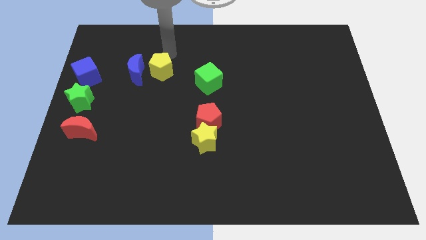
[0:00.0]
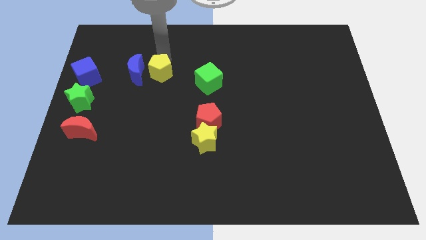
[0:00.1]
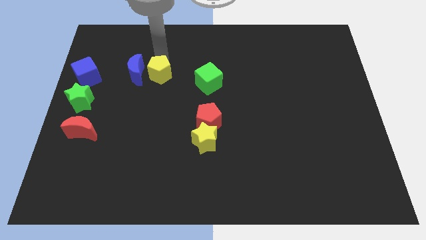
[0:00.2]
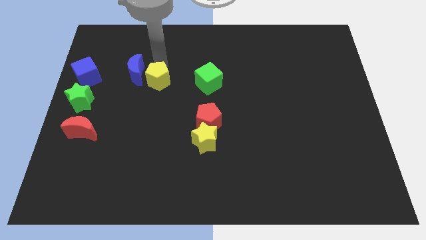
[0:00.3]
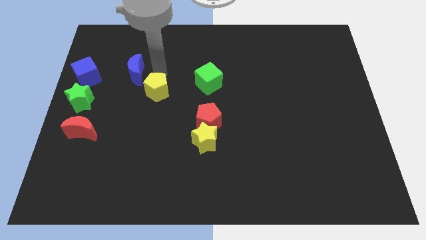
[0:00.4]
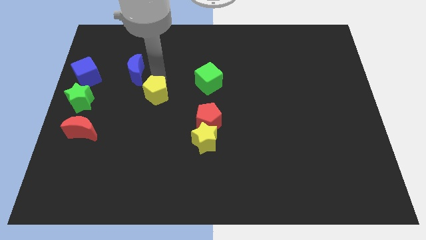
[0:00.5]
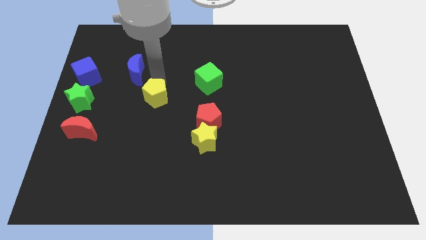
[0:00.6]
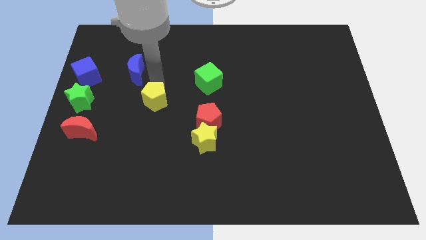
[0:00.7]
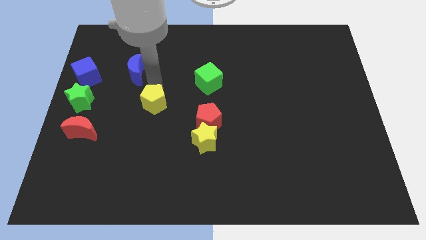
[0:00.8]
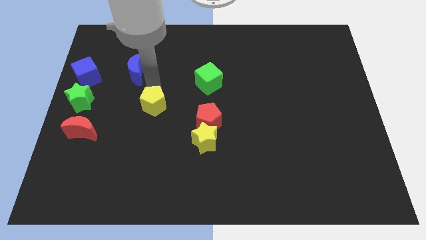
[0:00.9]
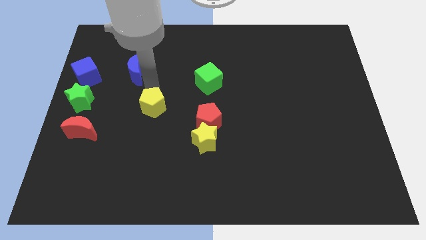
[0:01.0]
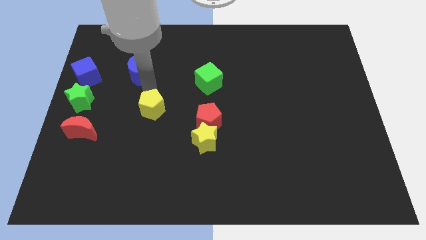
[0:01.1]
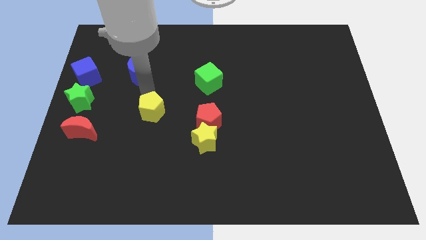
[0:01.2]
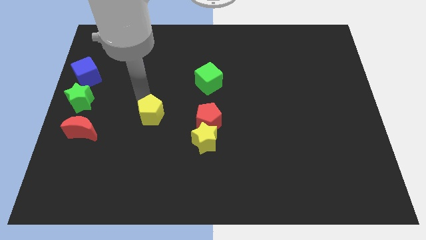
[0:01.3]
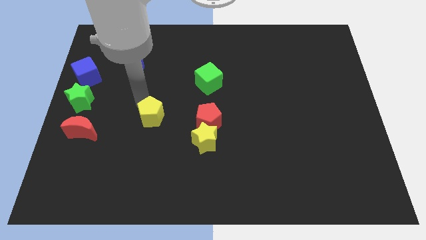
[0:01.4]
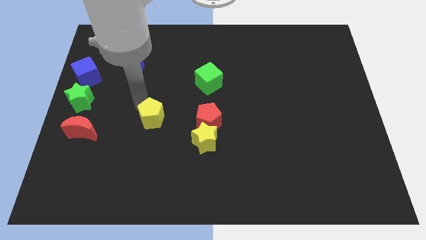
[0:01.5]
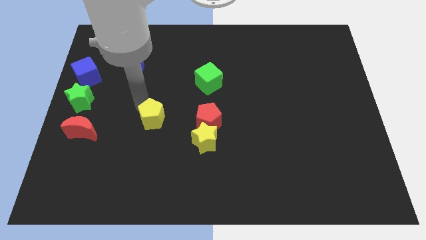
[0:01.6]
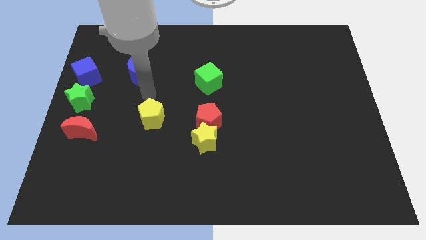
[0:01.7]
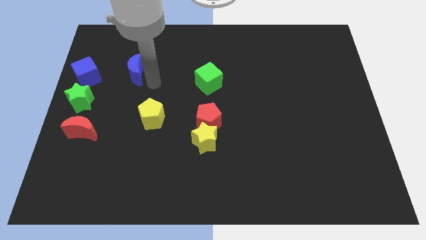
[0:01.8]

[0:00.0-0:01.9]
move the yellow pentagon left parallel to the red pentagon

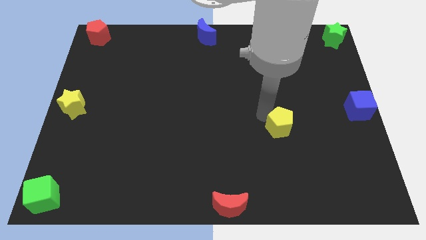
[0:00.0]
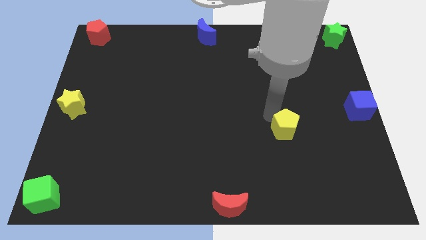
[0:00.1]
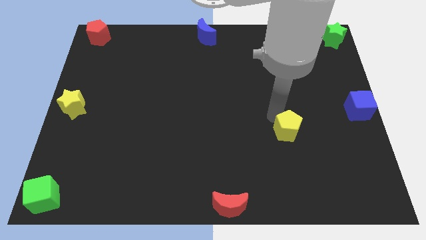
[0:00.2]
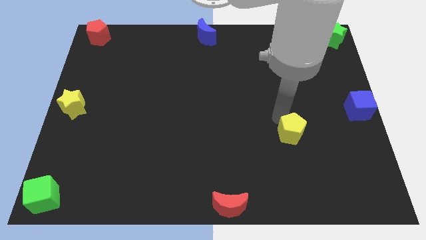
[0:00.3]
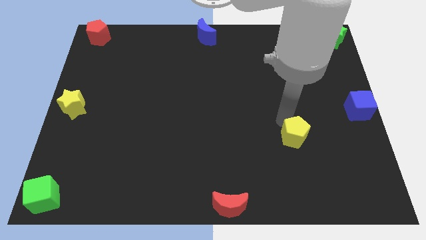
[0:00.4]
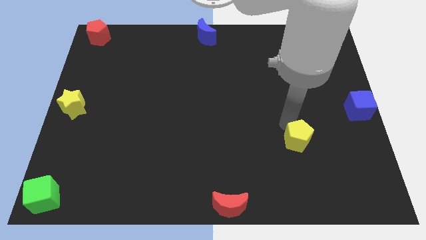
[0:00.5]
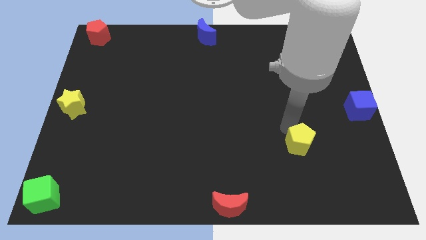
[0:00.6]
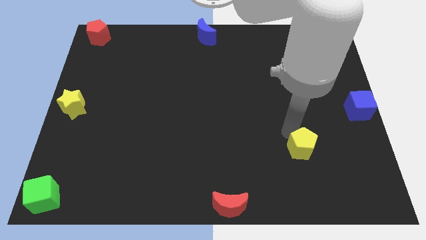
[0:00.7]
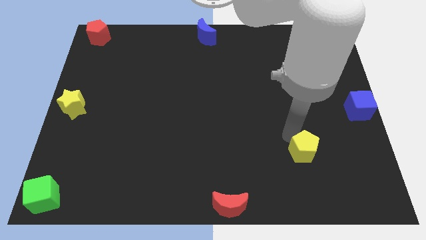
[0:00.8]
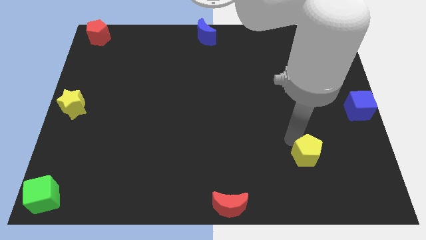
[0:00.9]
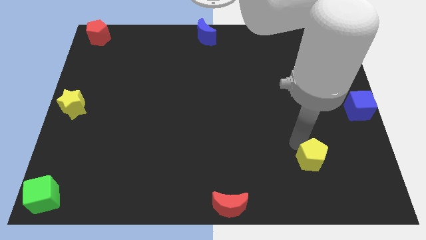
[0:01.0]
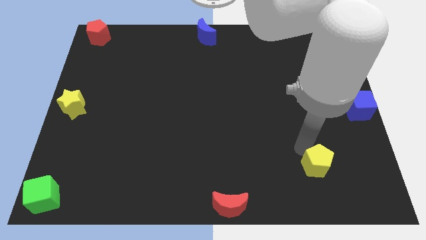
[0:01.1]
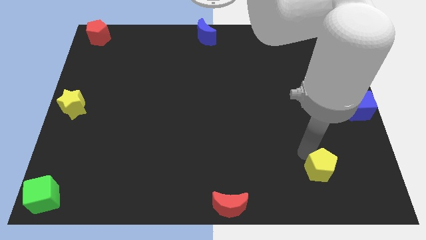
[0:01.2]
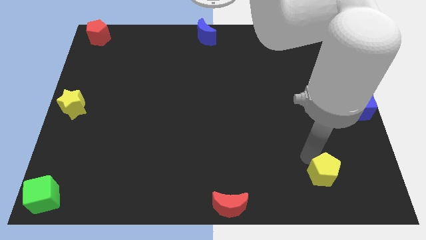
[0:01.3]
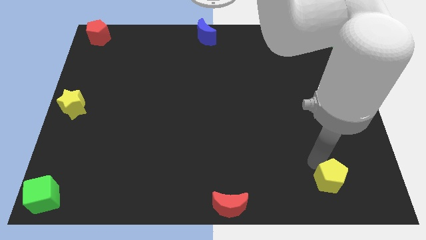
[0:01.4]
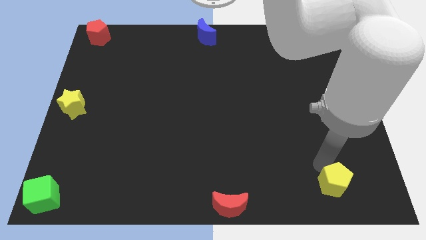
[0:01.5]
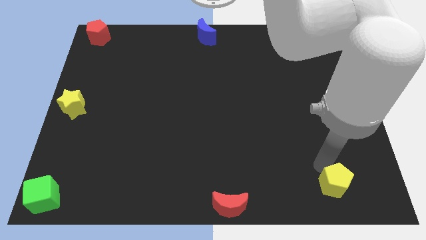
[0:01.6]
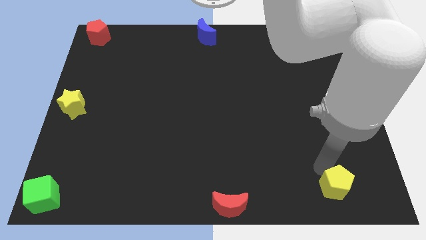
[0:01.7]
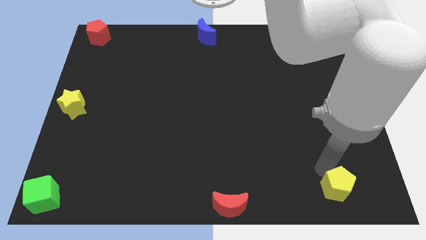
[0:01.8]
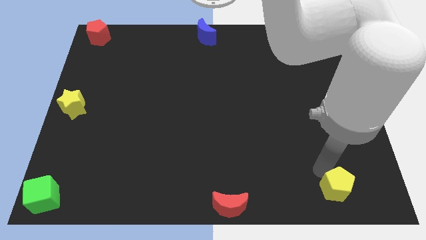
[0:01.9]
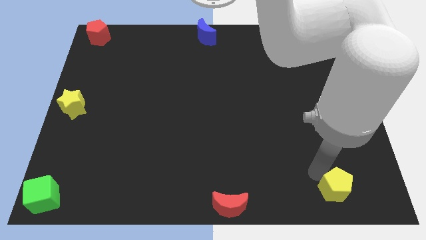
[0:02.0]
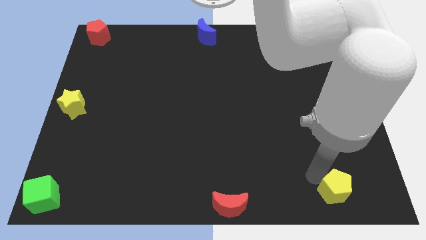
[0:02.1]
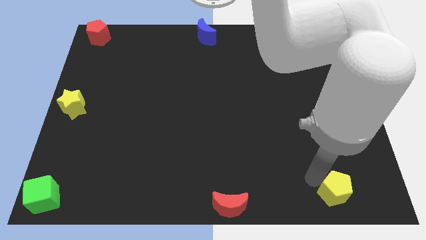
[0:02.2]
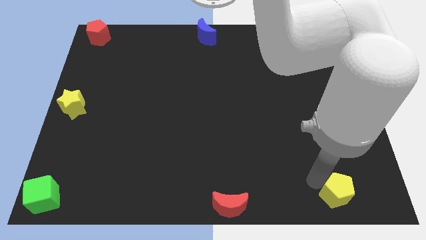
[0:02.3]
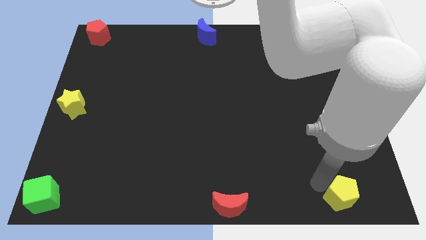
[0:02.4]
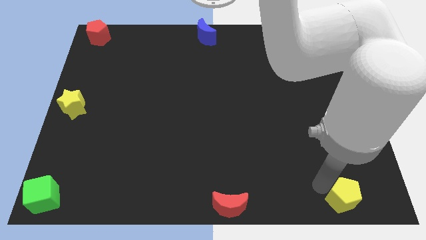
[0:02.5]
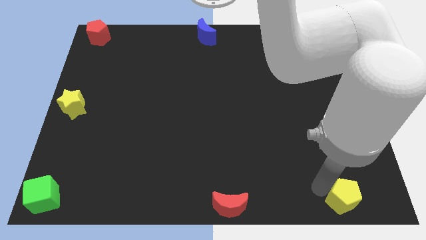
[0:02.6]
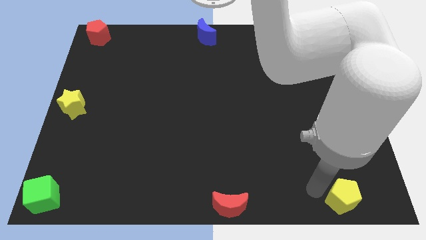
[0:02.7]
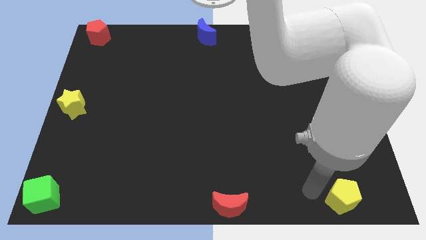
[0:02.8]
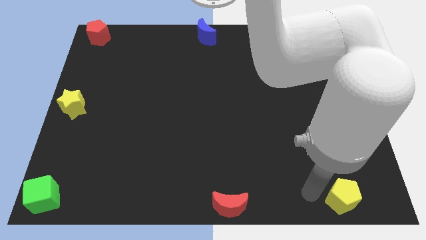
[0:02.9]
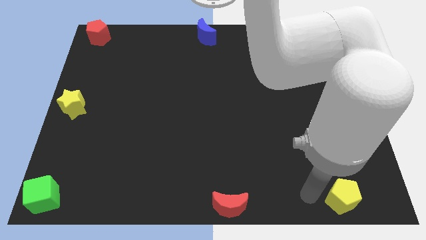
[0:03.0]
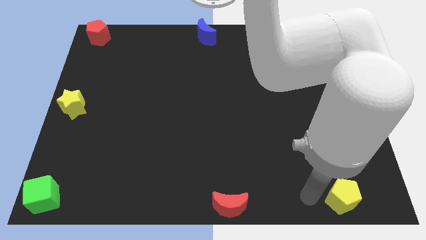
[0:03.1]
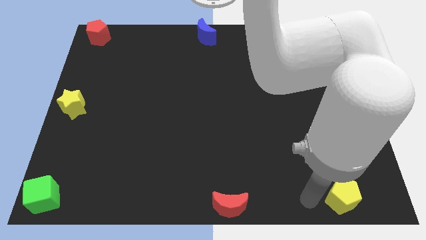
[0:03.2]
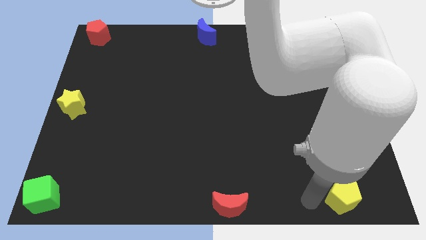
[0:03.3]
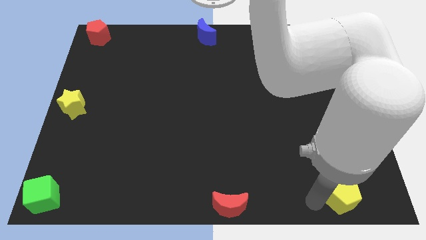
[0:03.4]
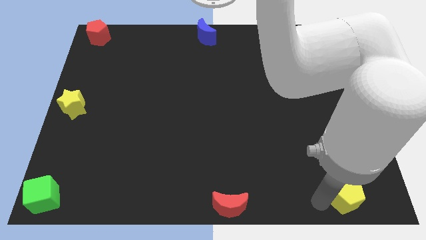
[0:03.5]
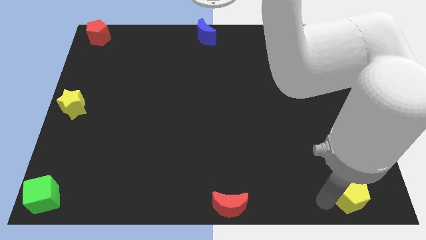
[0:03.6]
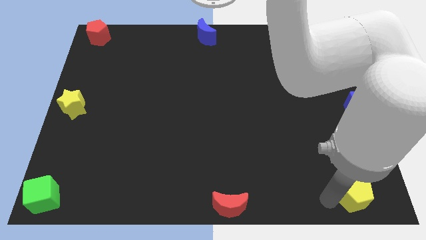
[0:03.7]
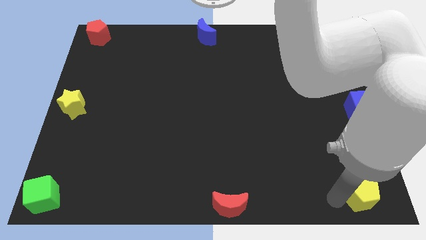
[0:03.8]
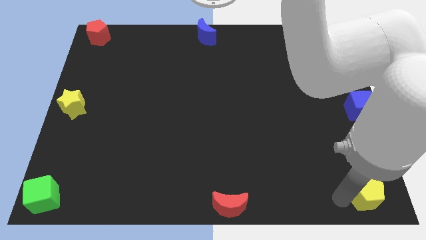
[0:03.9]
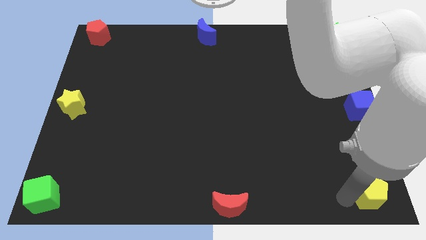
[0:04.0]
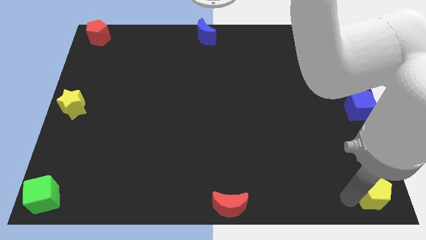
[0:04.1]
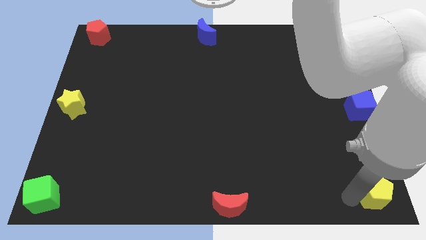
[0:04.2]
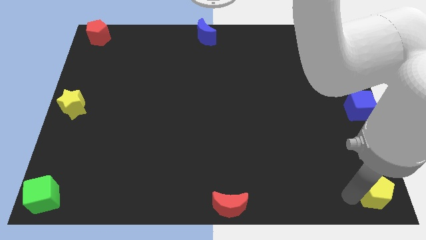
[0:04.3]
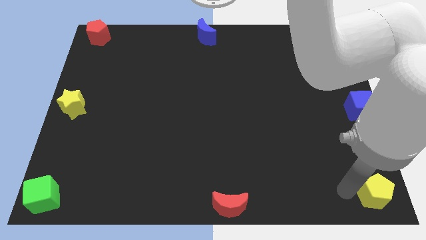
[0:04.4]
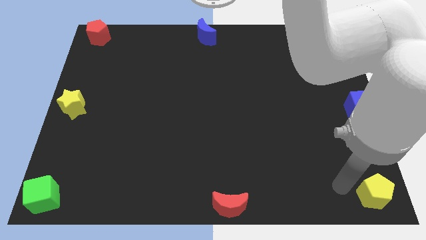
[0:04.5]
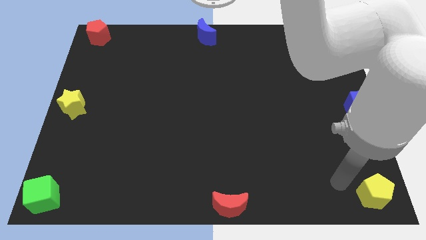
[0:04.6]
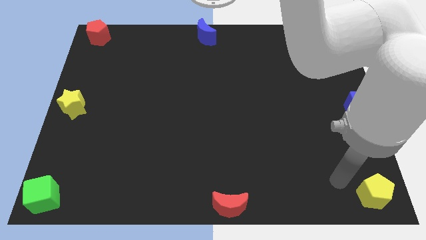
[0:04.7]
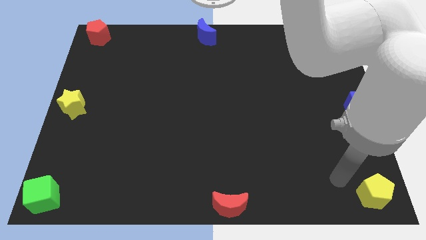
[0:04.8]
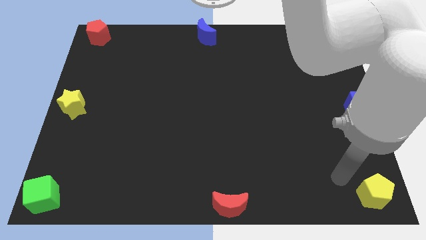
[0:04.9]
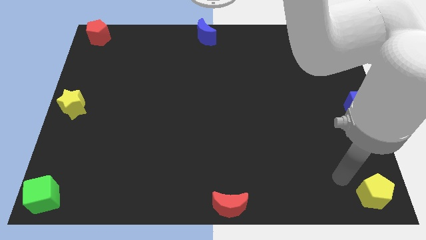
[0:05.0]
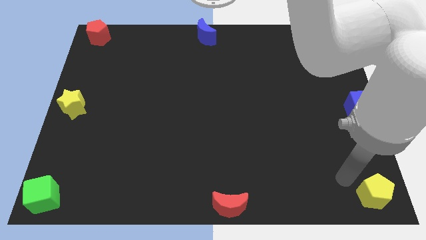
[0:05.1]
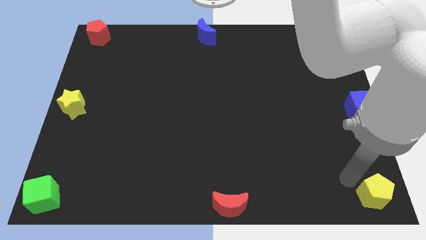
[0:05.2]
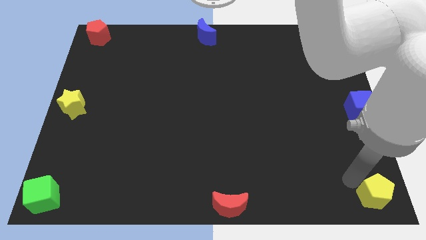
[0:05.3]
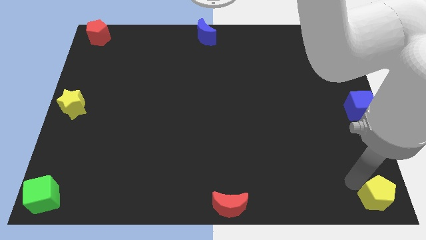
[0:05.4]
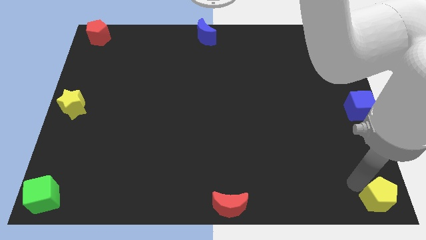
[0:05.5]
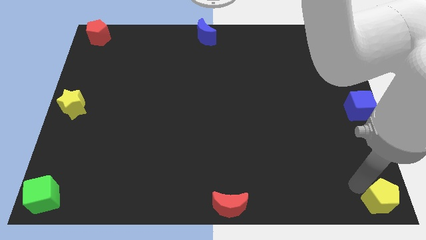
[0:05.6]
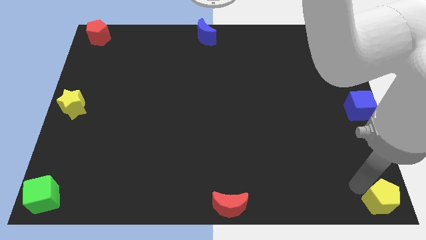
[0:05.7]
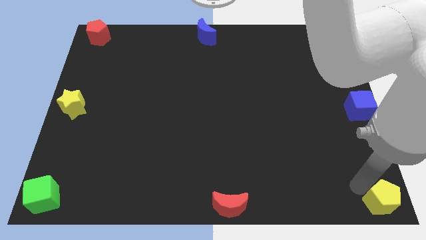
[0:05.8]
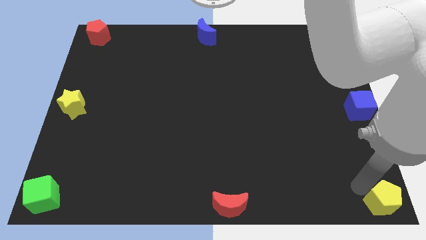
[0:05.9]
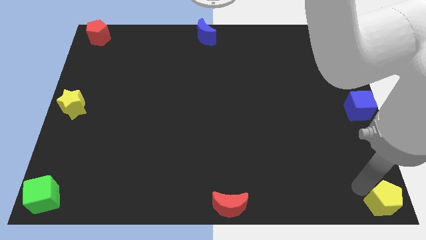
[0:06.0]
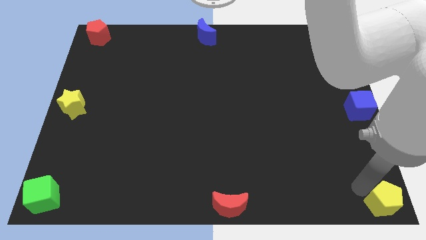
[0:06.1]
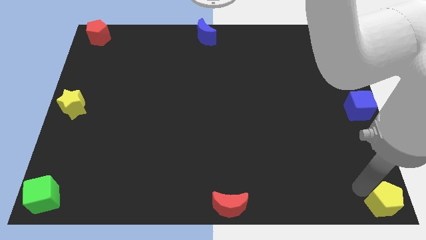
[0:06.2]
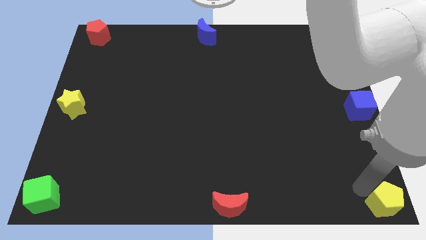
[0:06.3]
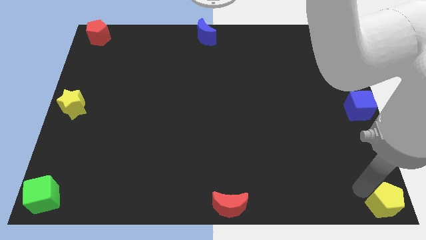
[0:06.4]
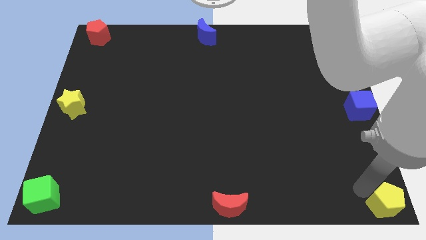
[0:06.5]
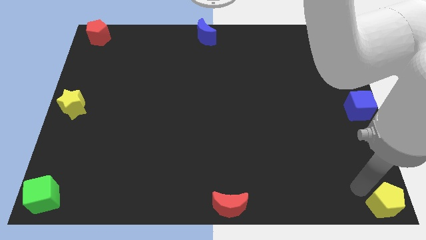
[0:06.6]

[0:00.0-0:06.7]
move the yellow pentagon to the bottom right on the board

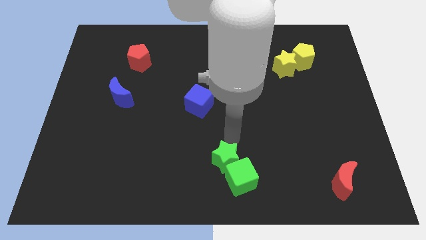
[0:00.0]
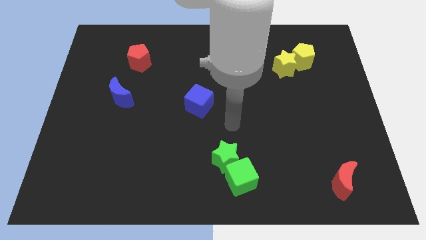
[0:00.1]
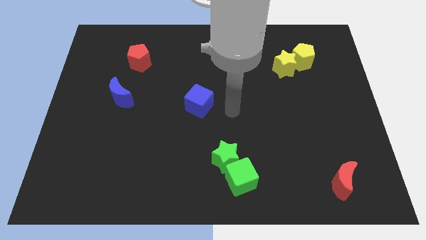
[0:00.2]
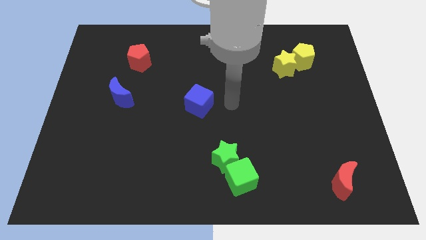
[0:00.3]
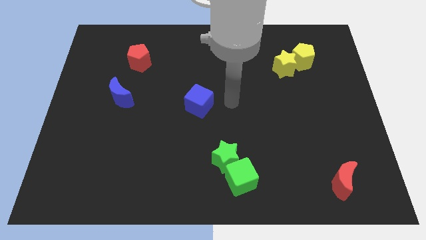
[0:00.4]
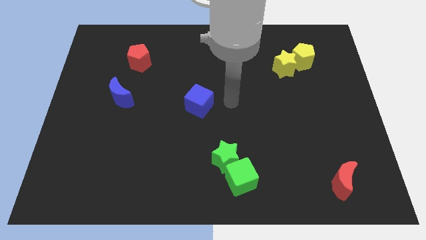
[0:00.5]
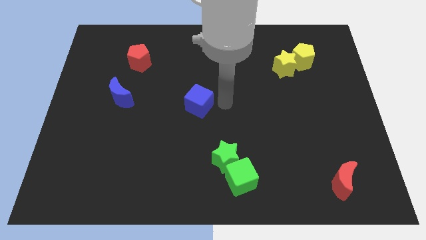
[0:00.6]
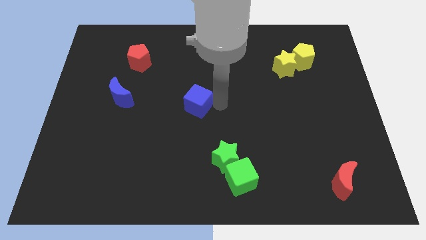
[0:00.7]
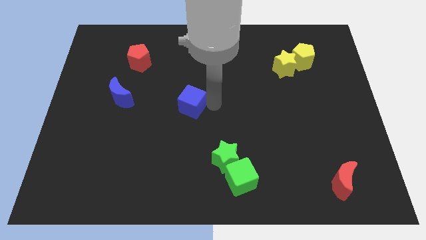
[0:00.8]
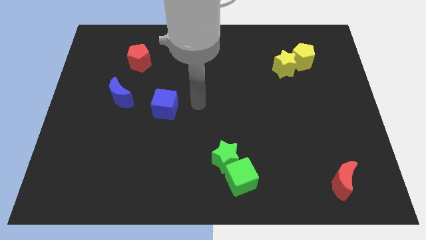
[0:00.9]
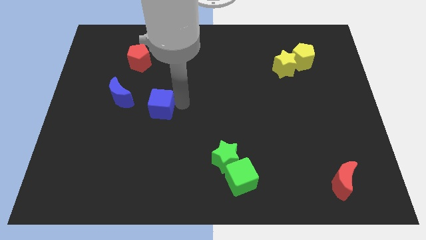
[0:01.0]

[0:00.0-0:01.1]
place blue cube to the right of blue moon
